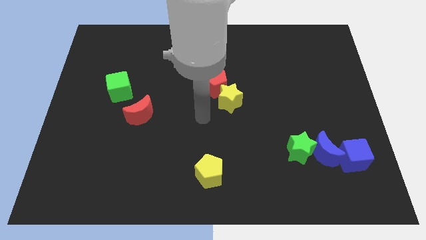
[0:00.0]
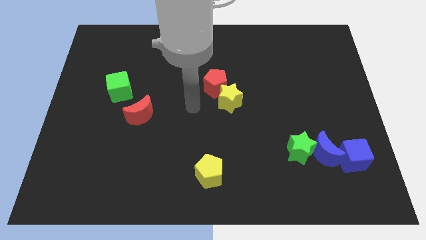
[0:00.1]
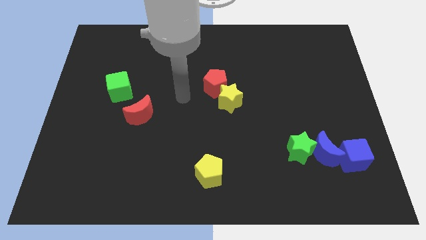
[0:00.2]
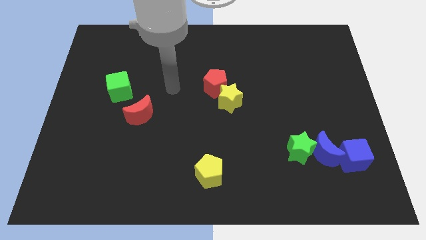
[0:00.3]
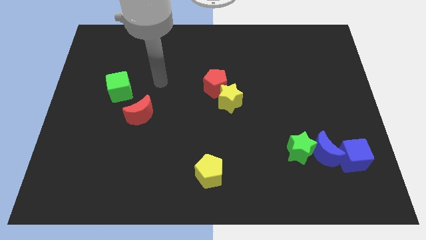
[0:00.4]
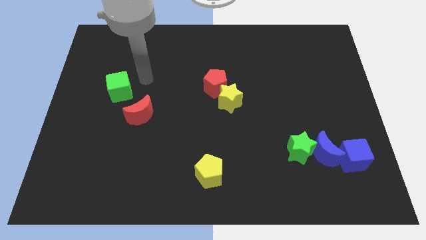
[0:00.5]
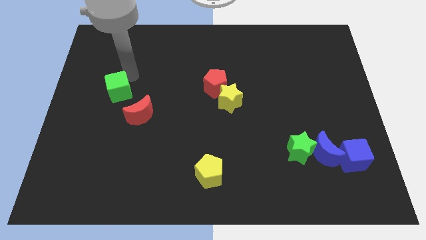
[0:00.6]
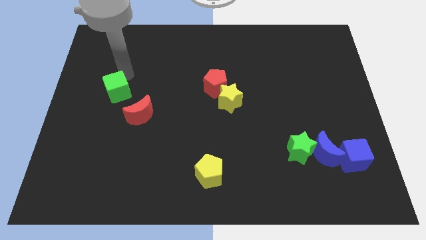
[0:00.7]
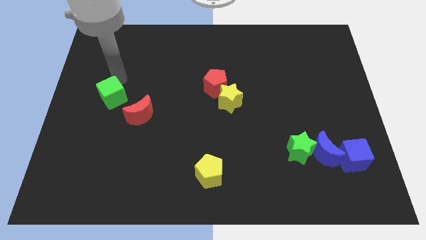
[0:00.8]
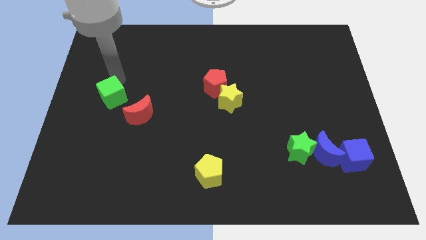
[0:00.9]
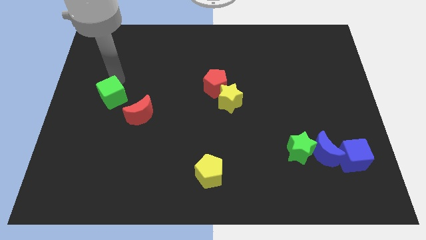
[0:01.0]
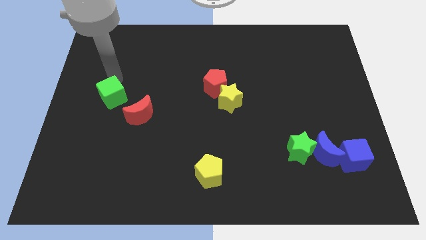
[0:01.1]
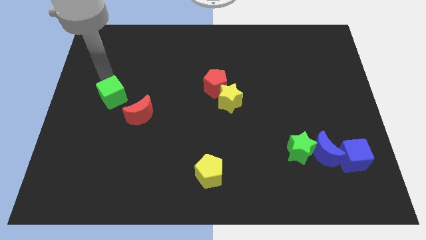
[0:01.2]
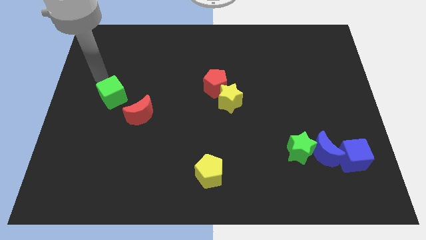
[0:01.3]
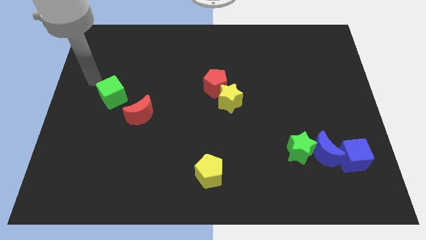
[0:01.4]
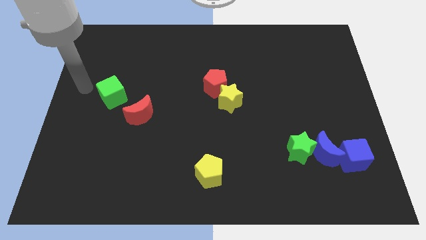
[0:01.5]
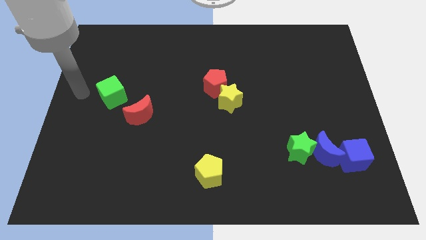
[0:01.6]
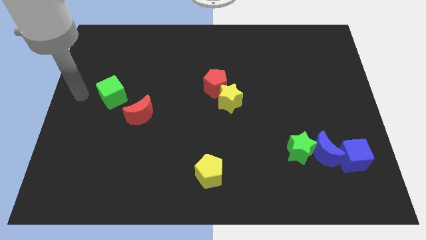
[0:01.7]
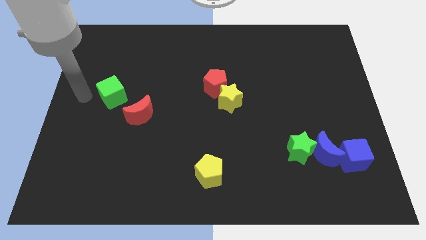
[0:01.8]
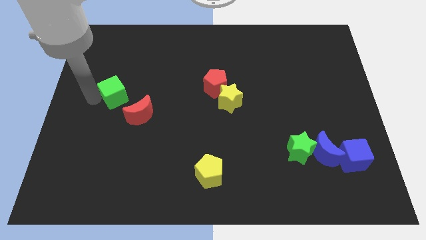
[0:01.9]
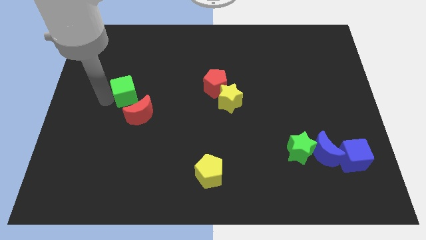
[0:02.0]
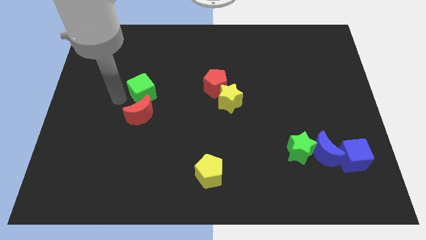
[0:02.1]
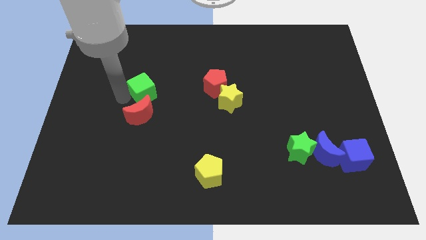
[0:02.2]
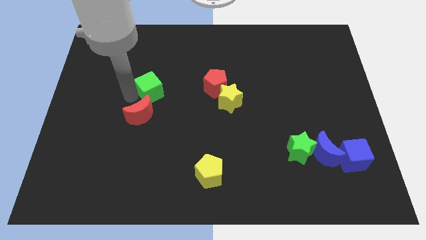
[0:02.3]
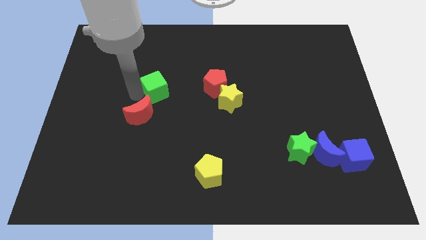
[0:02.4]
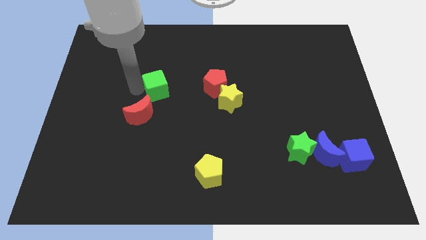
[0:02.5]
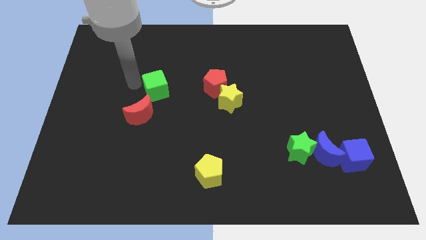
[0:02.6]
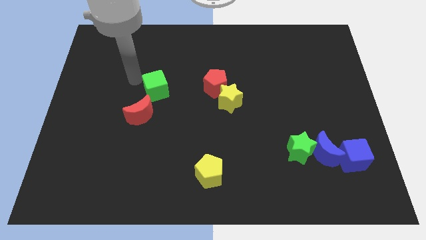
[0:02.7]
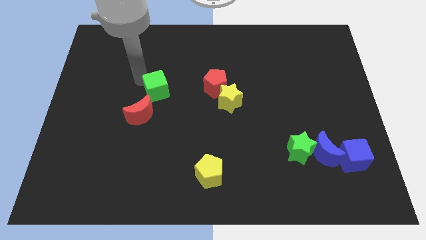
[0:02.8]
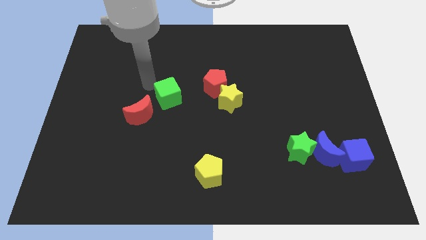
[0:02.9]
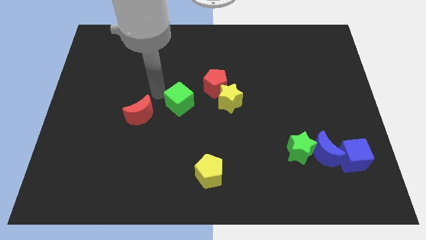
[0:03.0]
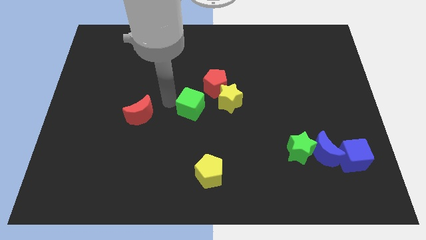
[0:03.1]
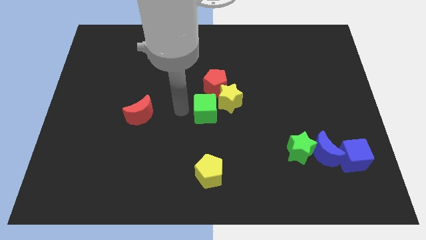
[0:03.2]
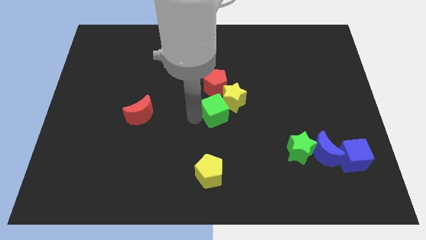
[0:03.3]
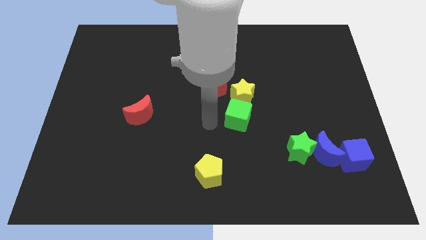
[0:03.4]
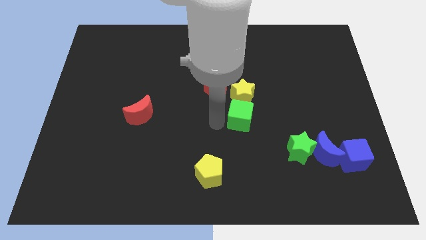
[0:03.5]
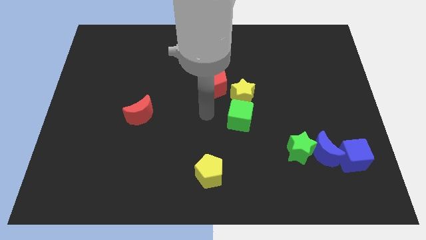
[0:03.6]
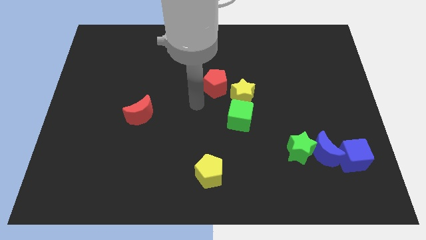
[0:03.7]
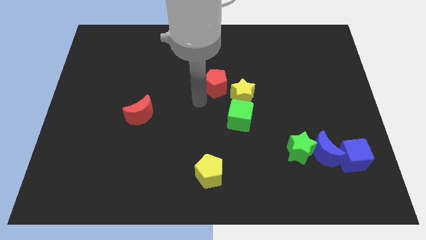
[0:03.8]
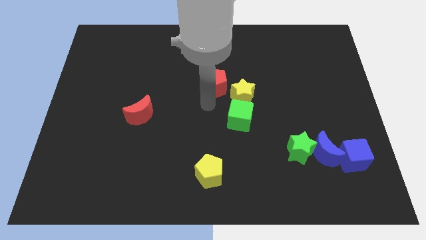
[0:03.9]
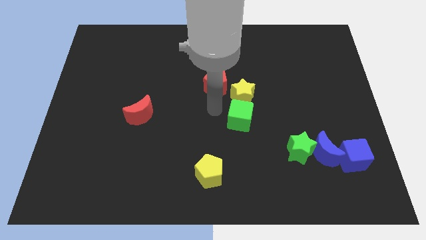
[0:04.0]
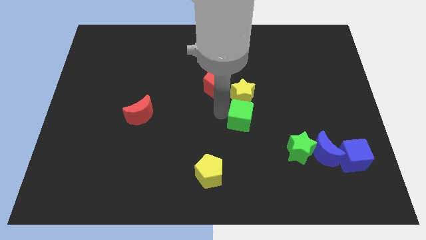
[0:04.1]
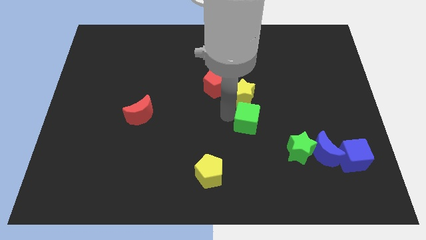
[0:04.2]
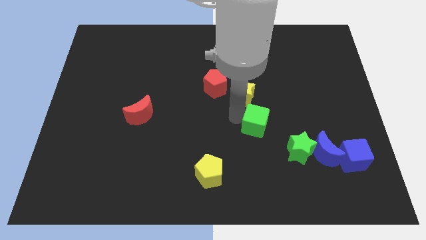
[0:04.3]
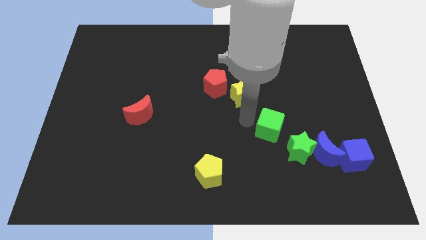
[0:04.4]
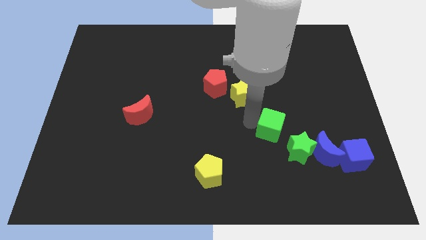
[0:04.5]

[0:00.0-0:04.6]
place green cube in between the green star and yellow star

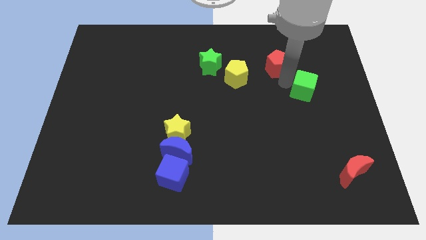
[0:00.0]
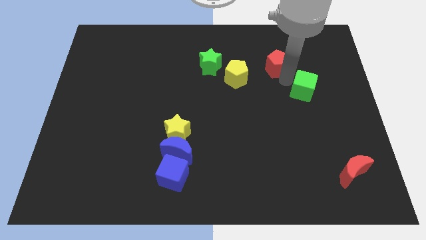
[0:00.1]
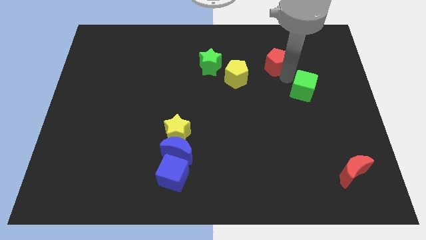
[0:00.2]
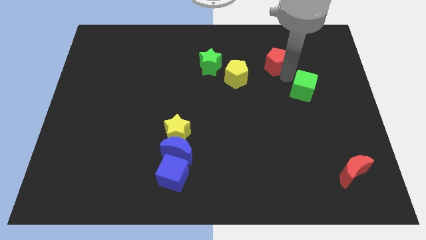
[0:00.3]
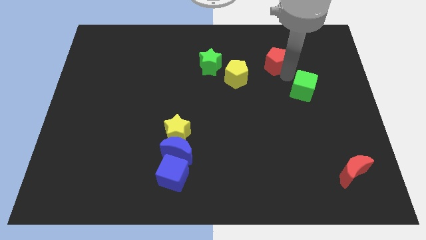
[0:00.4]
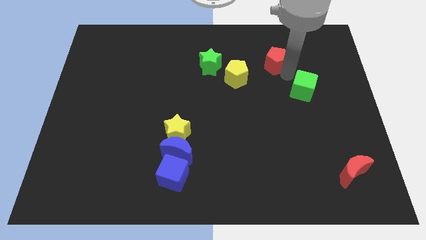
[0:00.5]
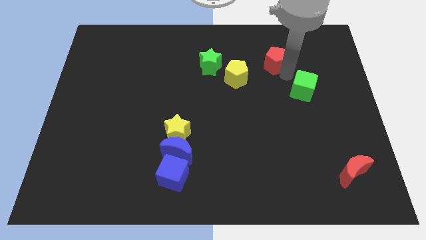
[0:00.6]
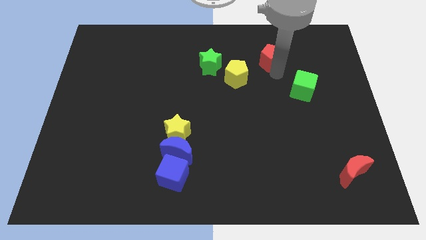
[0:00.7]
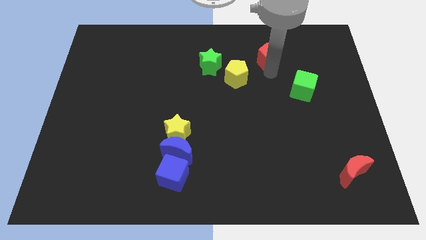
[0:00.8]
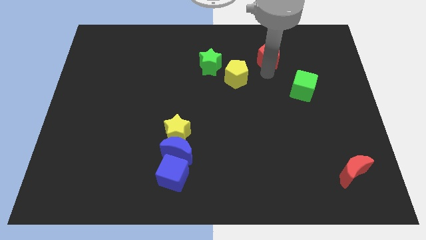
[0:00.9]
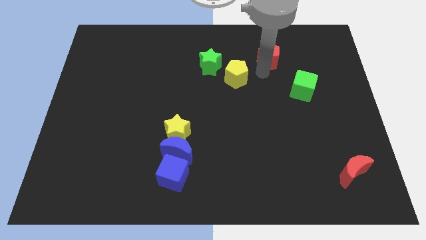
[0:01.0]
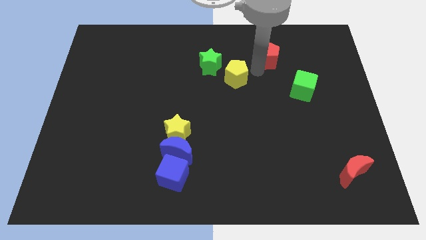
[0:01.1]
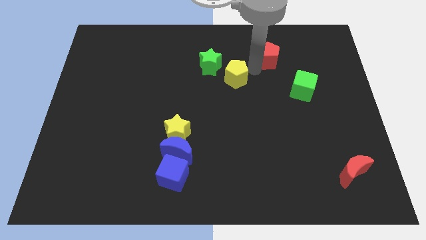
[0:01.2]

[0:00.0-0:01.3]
push the red pentagon upward

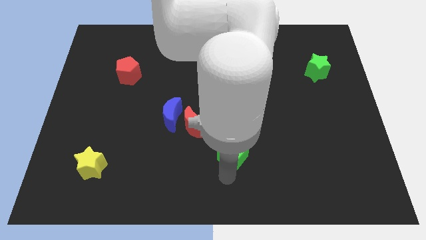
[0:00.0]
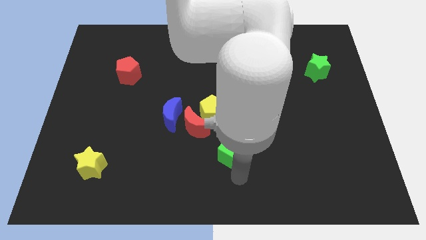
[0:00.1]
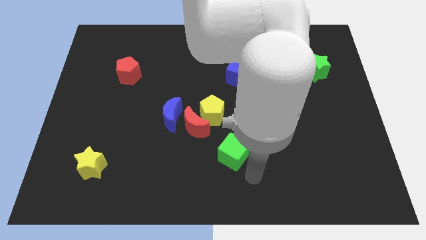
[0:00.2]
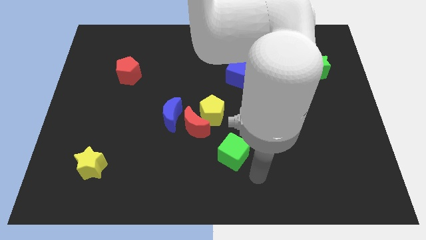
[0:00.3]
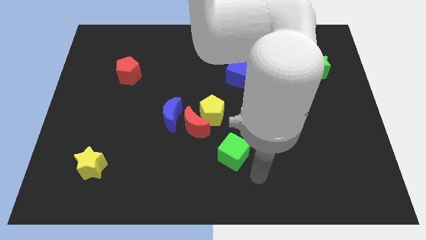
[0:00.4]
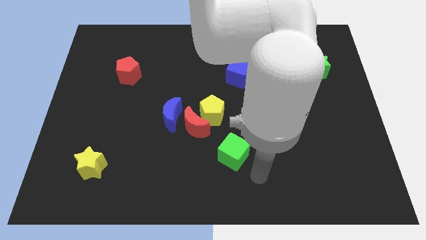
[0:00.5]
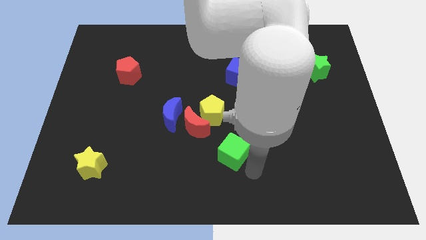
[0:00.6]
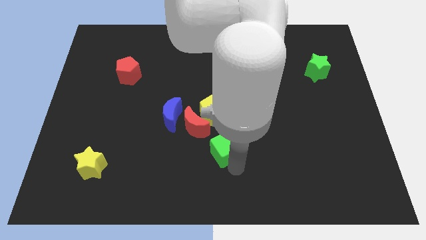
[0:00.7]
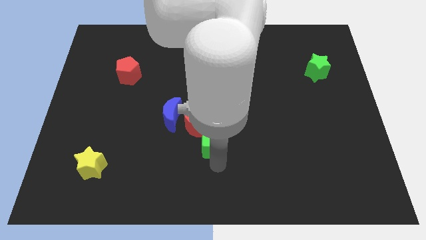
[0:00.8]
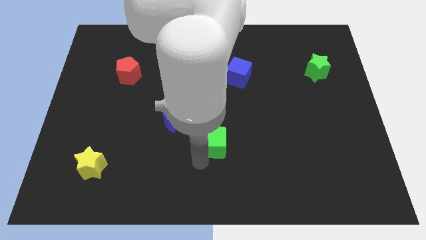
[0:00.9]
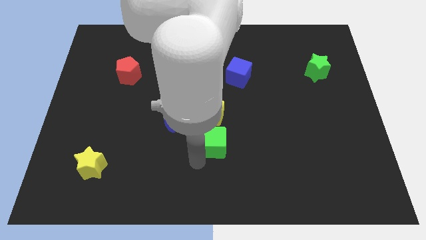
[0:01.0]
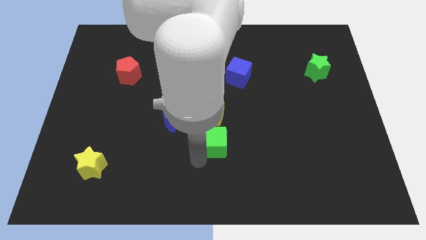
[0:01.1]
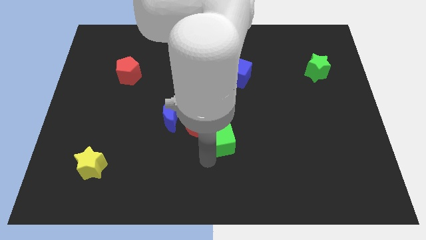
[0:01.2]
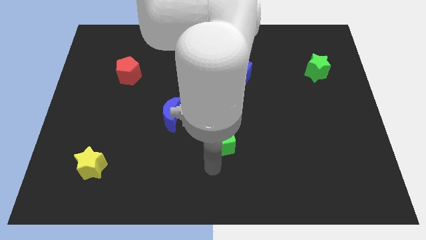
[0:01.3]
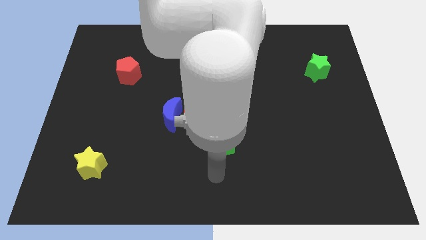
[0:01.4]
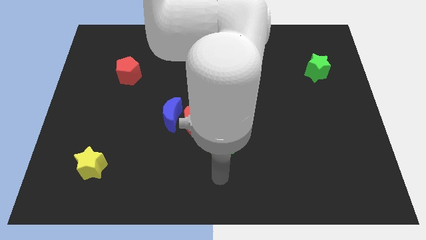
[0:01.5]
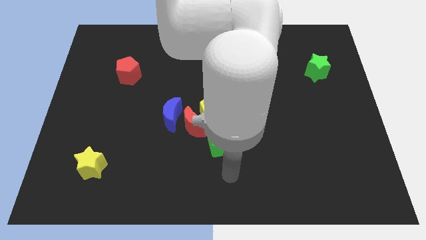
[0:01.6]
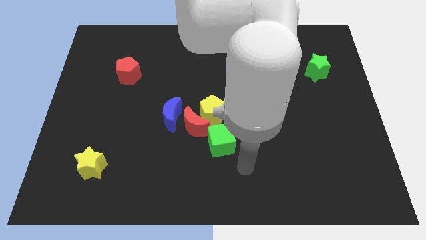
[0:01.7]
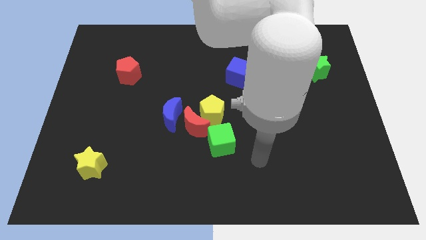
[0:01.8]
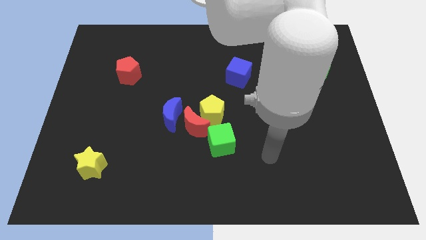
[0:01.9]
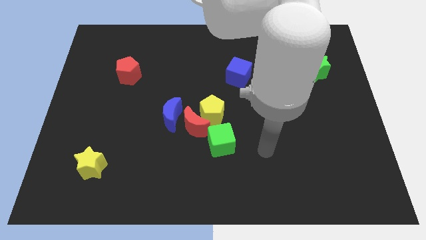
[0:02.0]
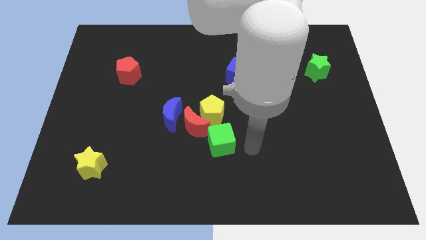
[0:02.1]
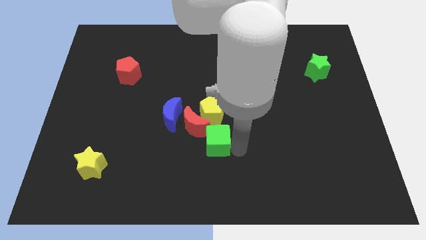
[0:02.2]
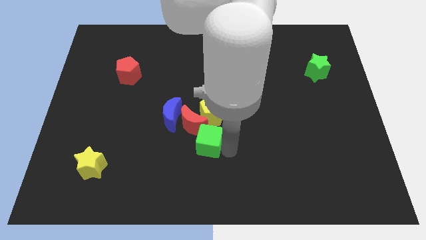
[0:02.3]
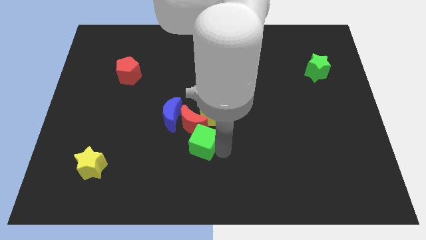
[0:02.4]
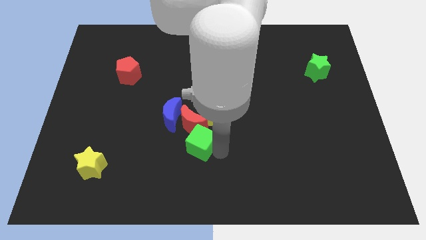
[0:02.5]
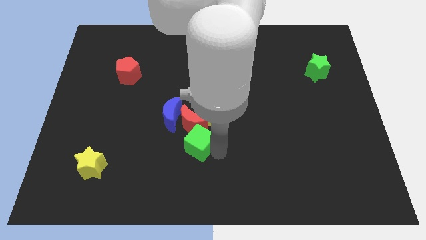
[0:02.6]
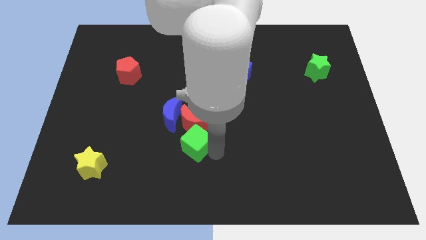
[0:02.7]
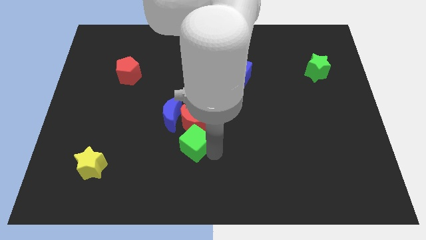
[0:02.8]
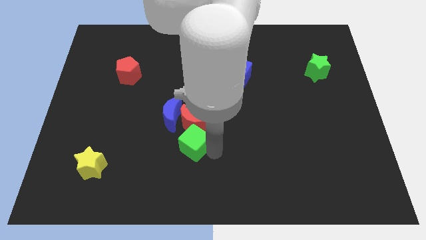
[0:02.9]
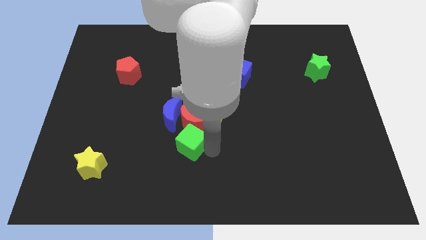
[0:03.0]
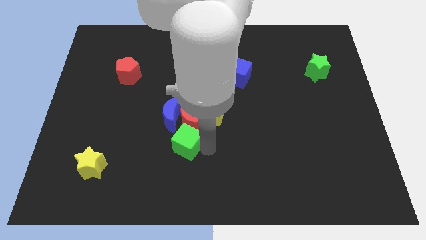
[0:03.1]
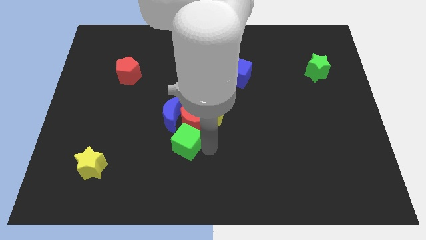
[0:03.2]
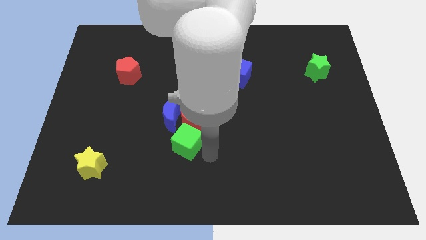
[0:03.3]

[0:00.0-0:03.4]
place the green cube below the red moon
